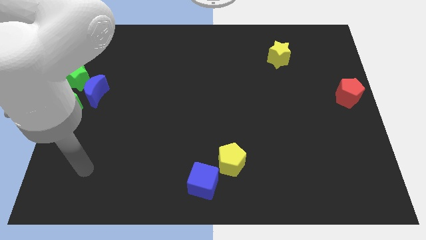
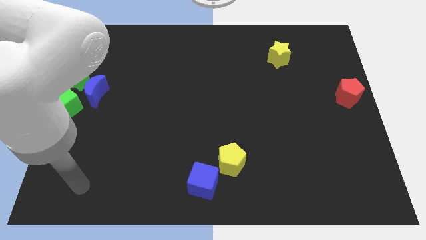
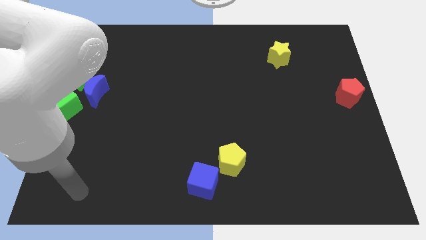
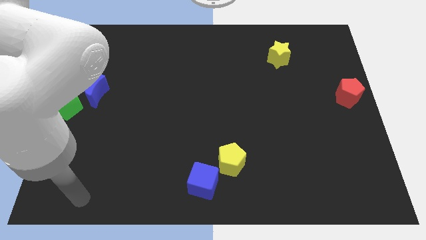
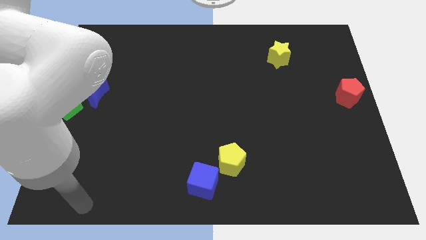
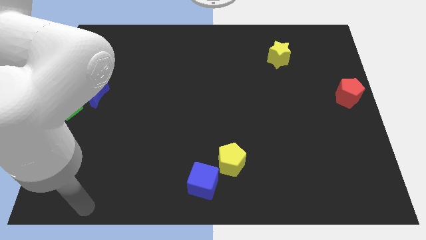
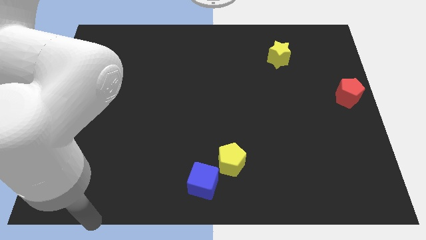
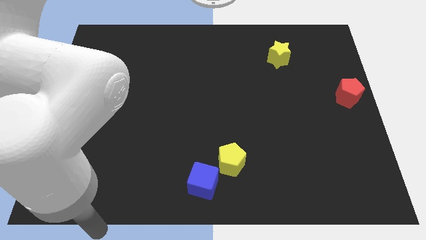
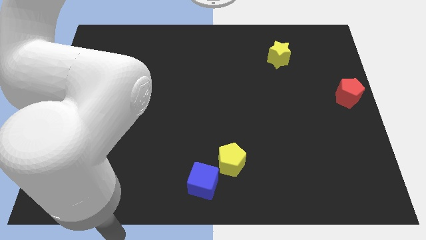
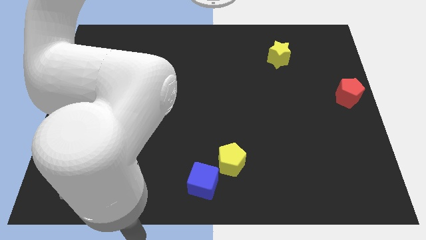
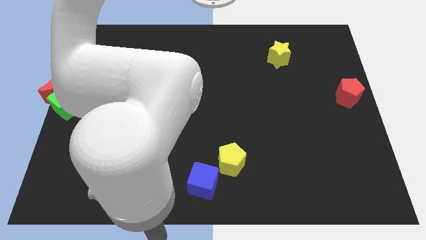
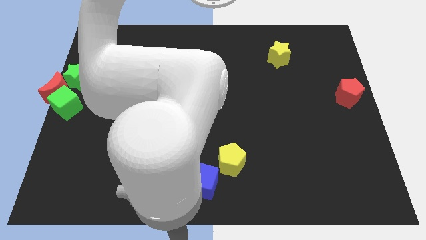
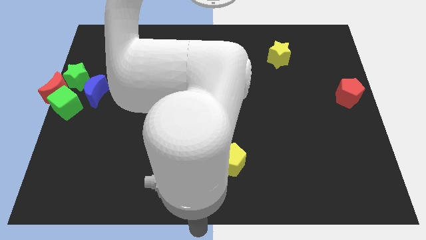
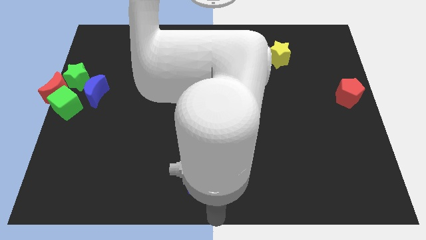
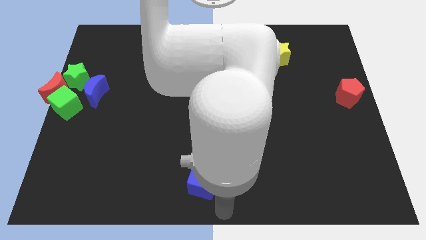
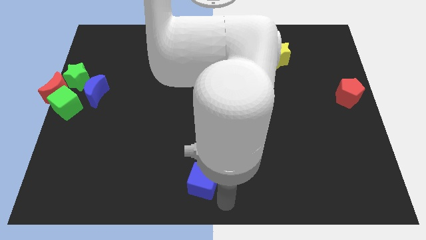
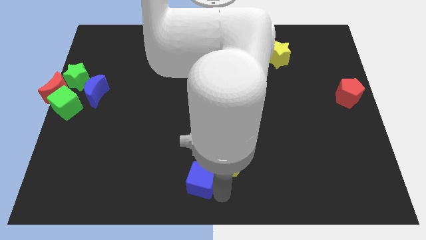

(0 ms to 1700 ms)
touch the right side of the blue cube

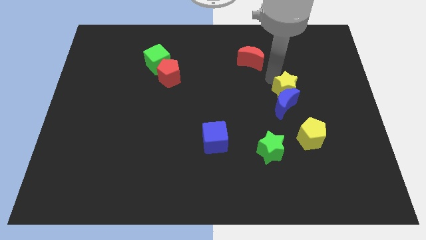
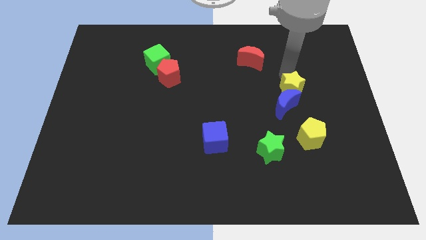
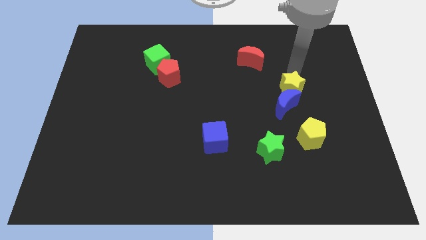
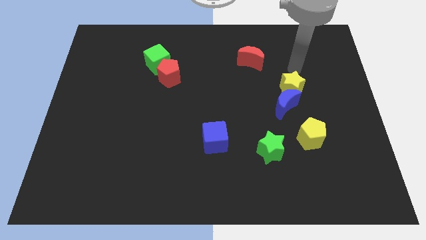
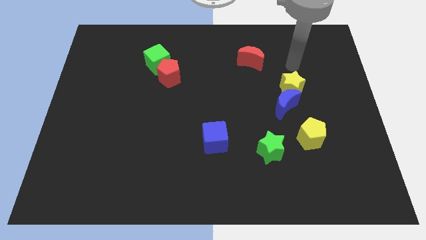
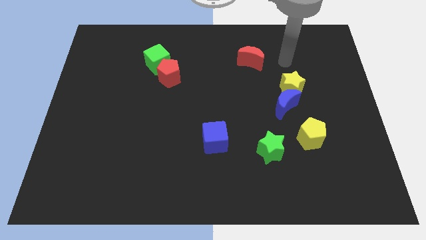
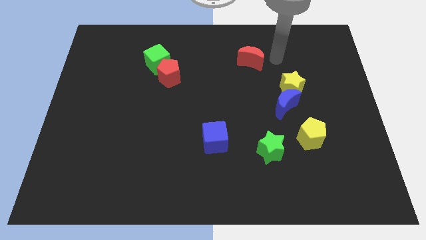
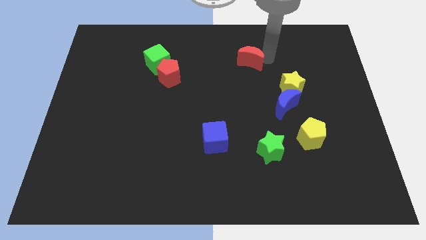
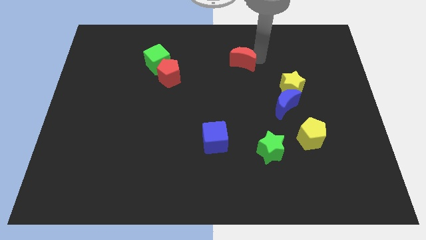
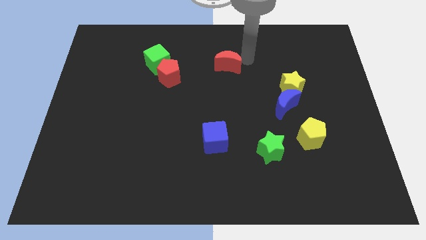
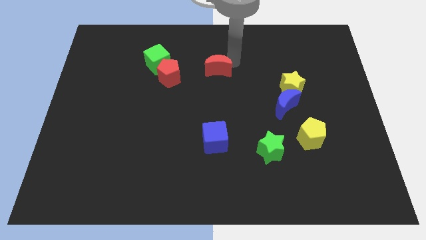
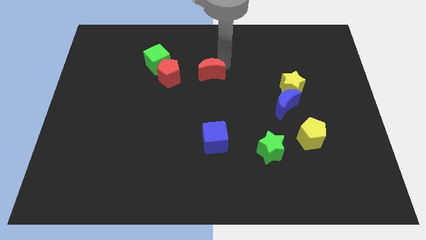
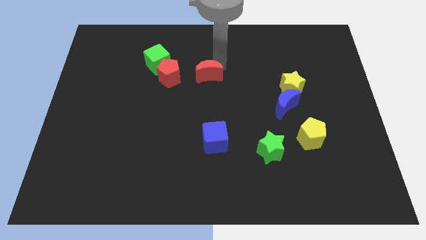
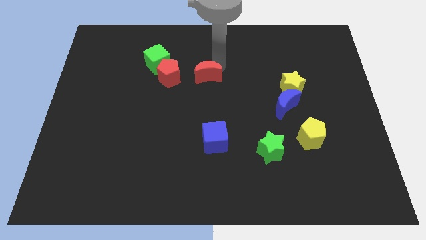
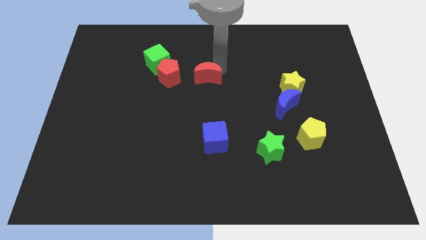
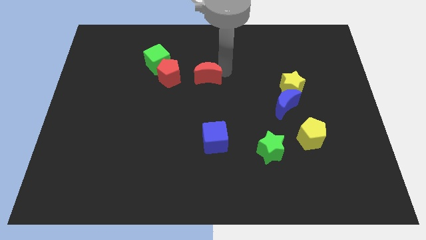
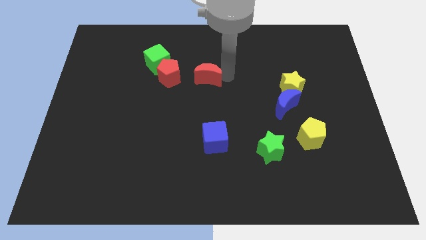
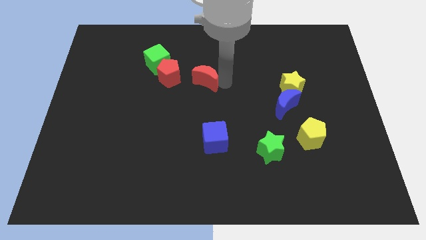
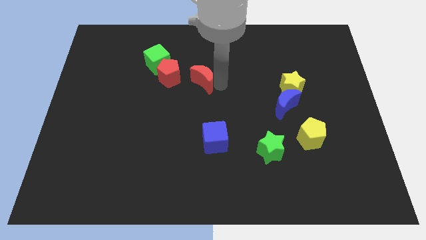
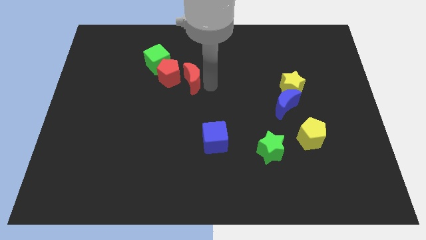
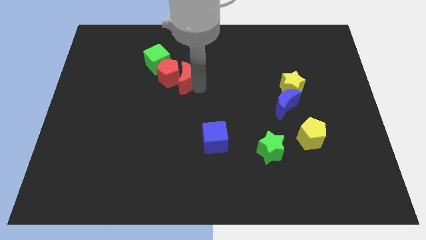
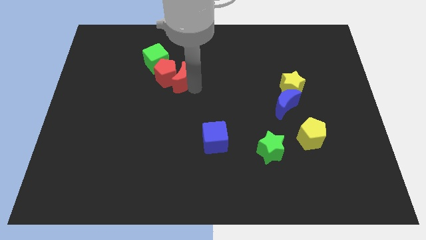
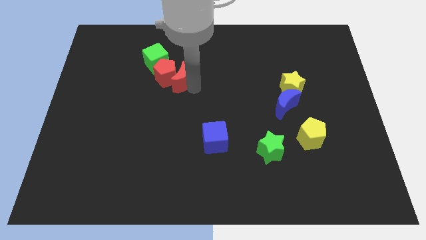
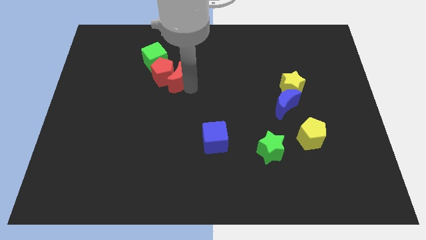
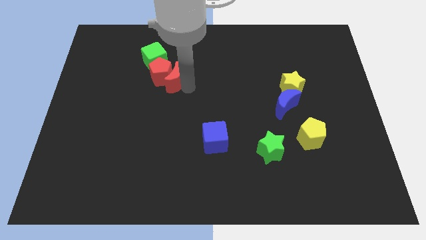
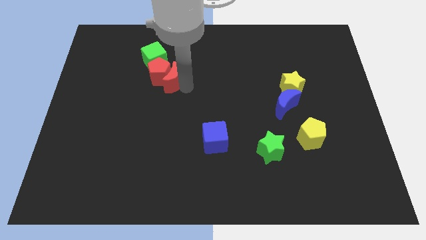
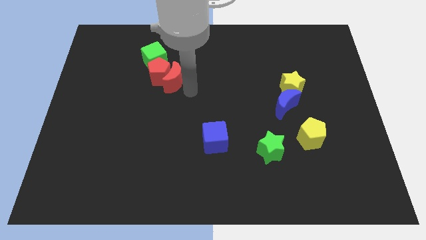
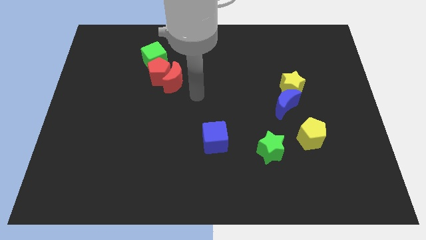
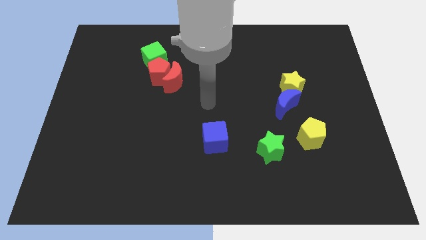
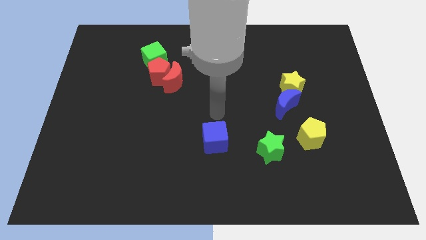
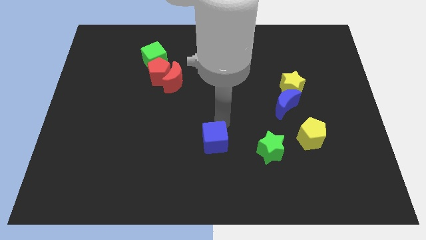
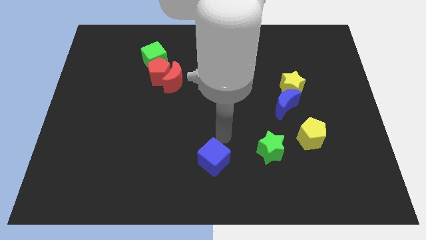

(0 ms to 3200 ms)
push the red moon into the red pentagon

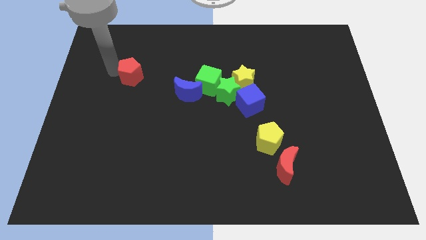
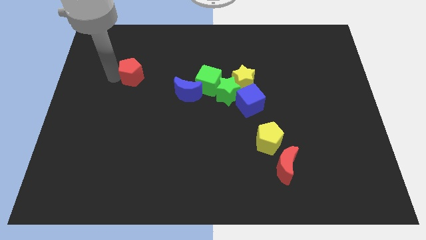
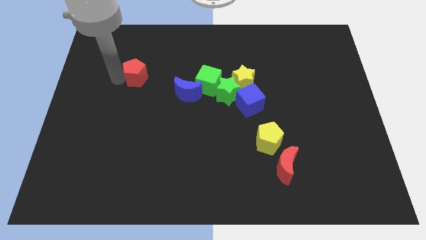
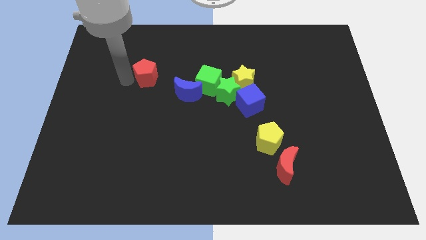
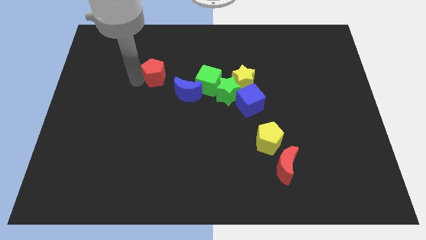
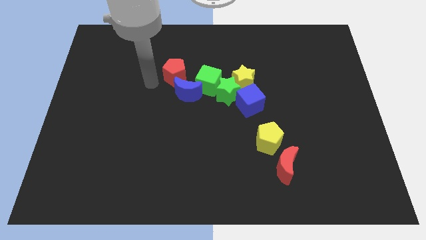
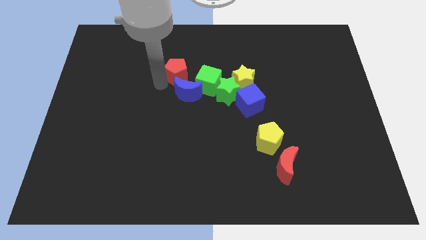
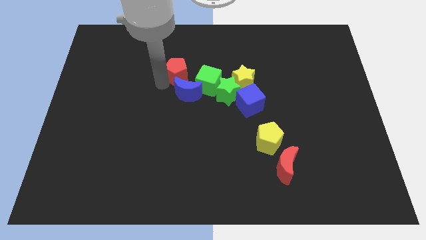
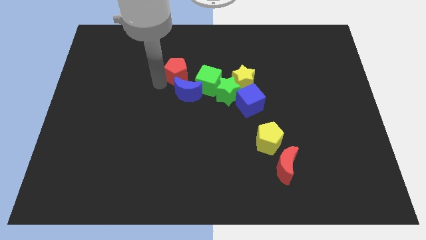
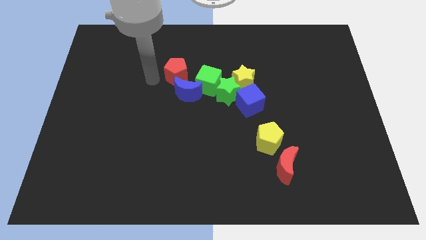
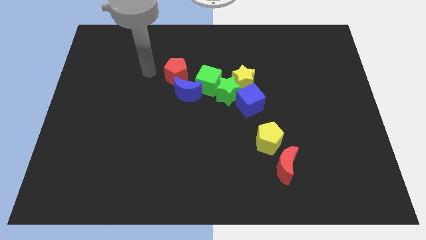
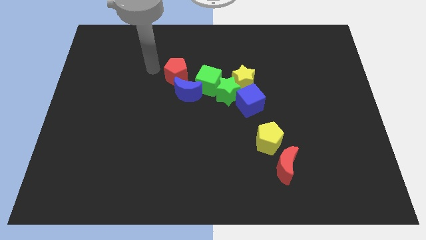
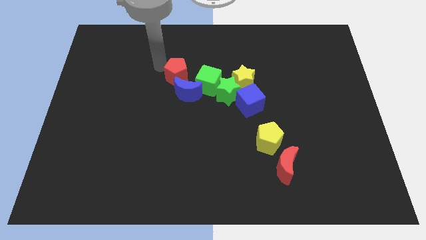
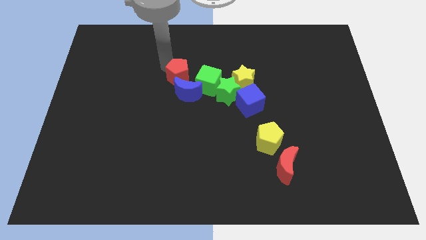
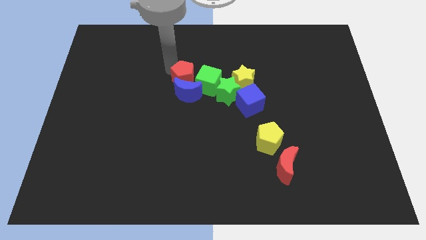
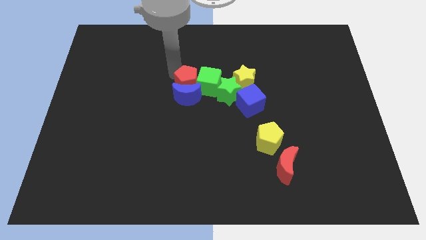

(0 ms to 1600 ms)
move the red pentagon into the green cube

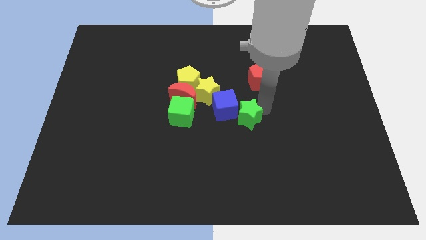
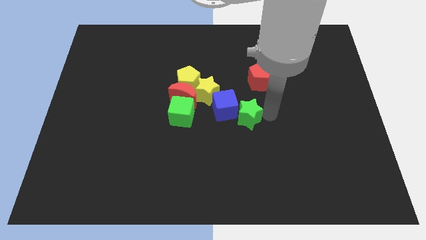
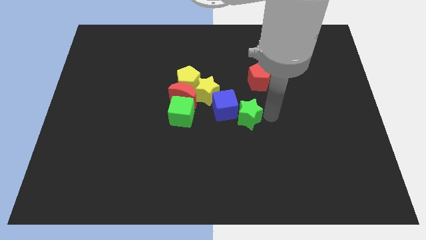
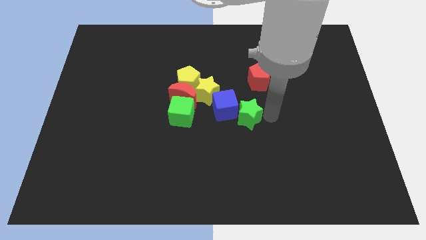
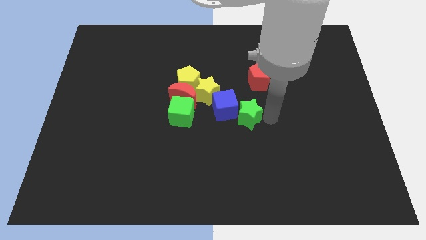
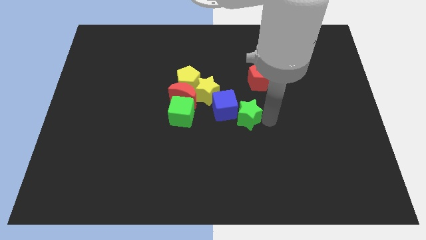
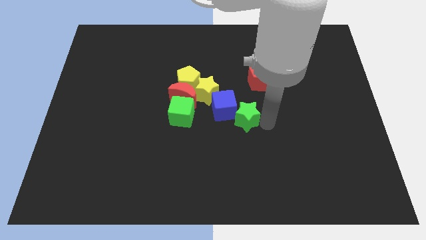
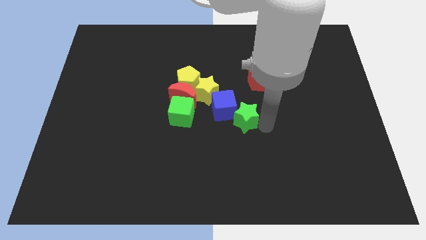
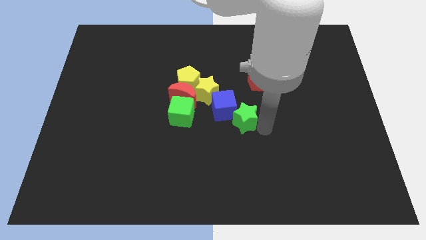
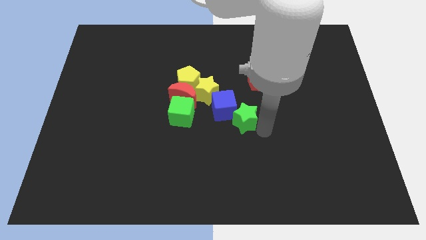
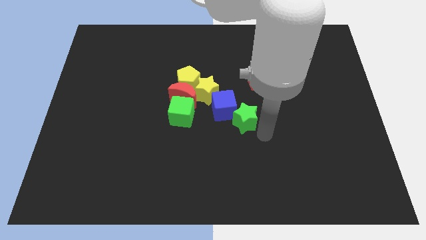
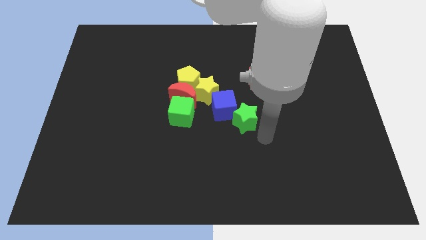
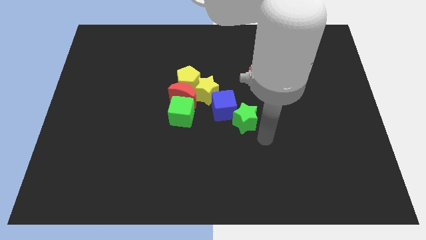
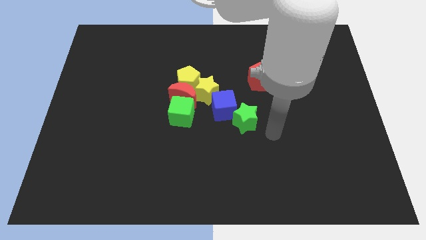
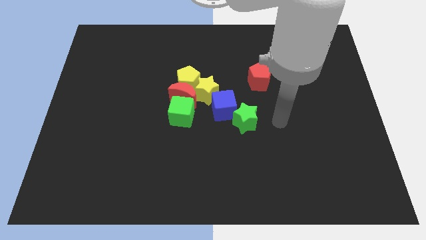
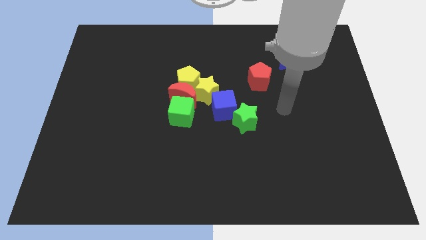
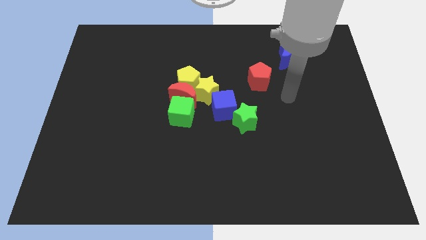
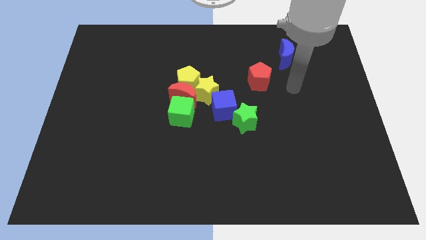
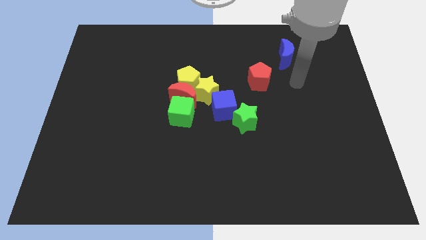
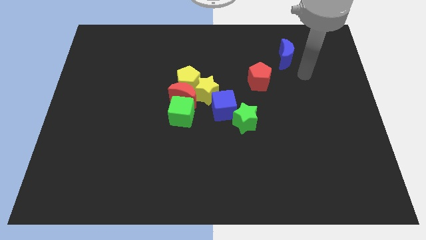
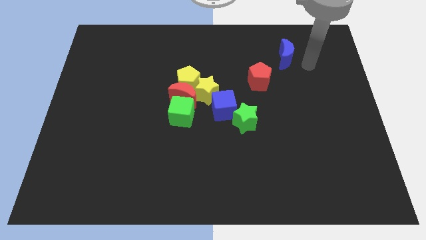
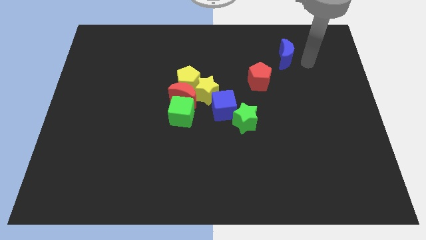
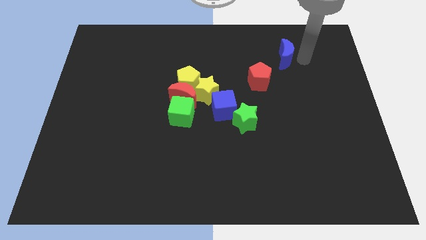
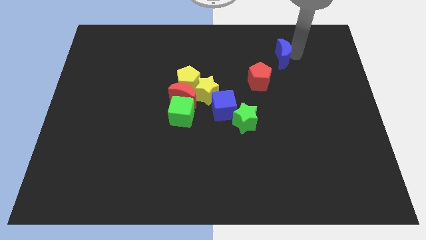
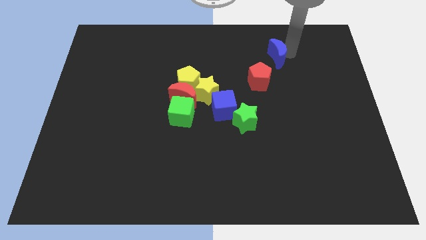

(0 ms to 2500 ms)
place the arm right to the blue moon
